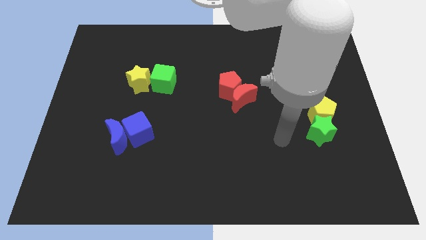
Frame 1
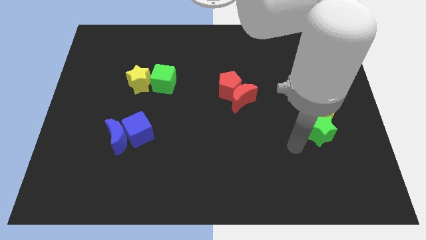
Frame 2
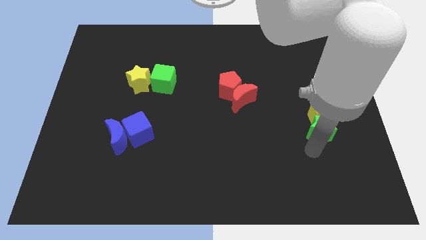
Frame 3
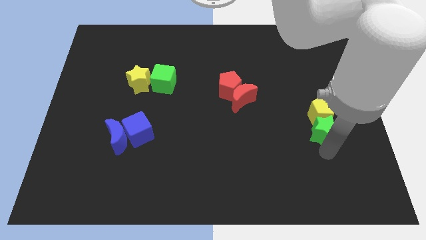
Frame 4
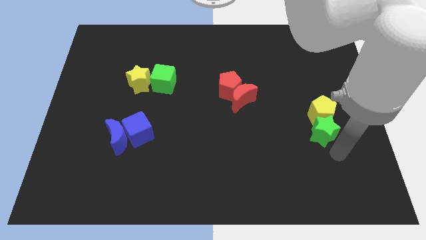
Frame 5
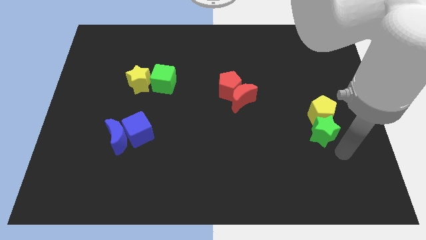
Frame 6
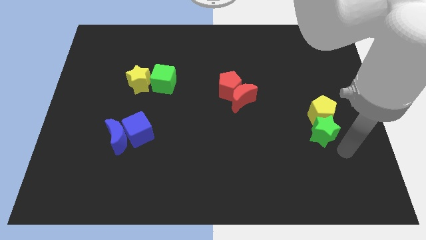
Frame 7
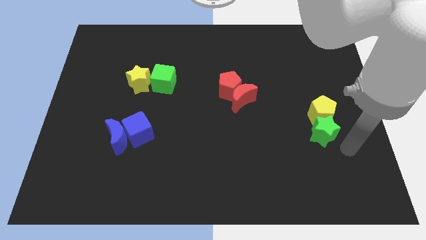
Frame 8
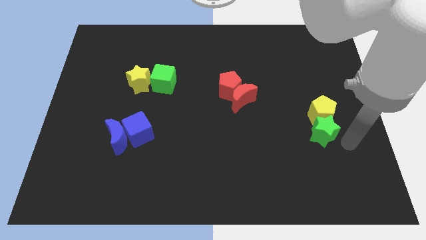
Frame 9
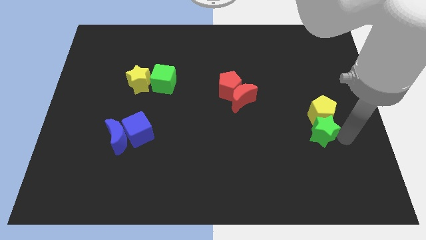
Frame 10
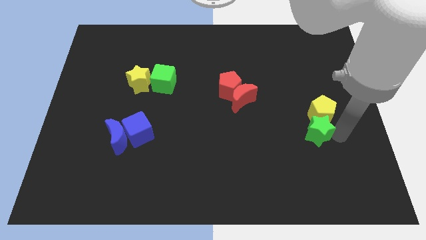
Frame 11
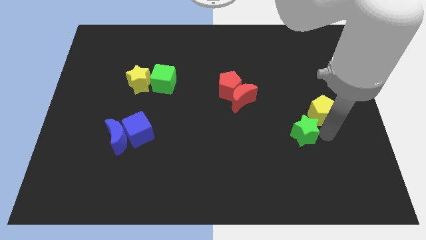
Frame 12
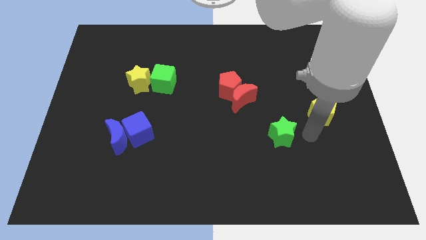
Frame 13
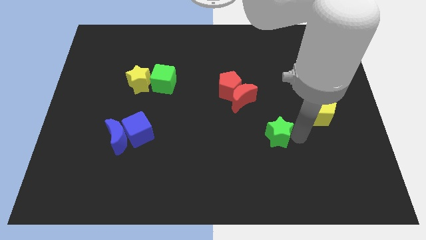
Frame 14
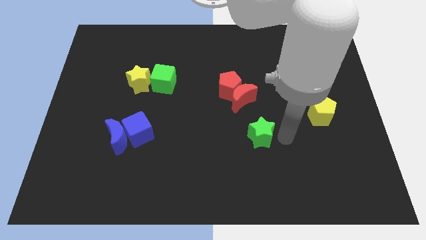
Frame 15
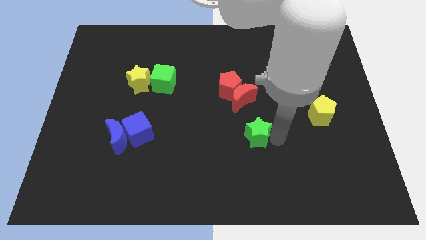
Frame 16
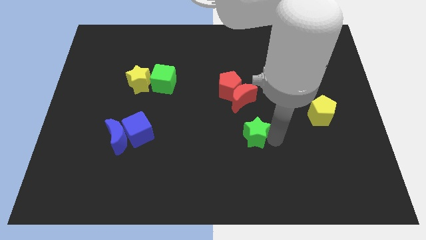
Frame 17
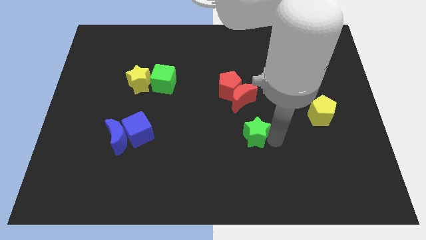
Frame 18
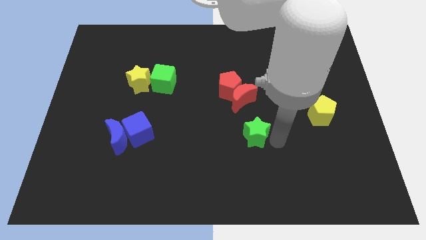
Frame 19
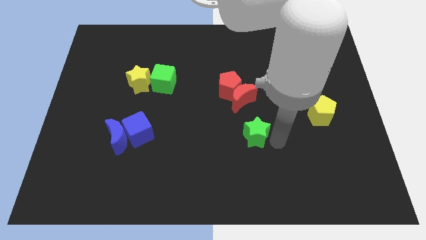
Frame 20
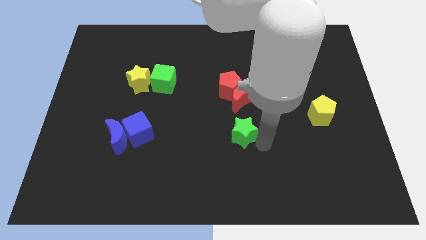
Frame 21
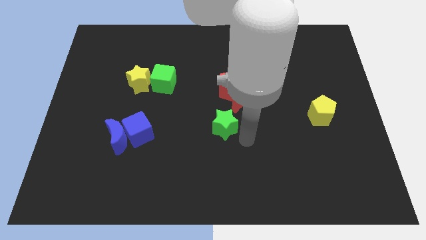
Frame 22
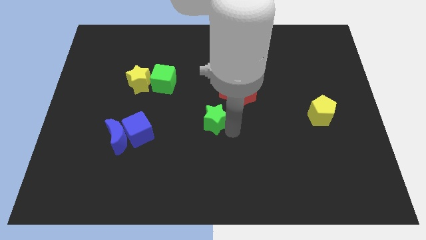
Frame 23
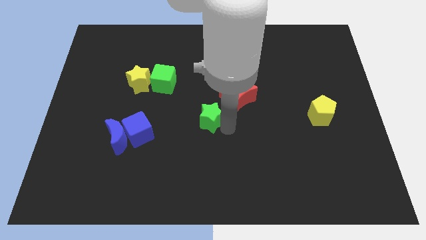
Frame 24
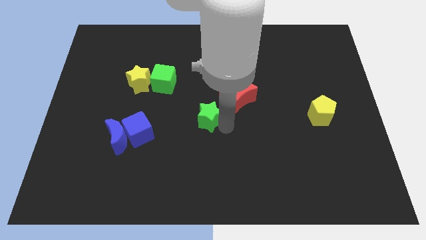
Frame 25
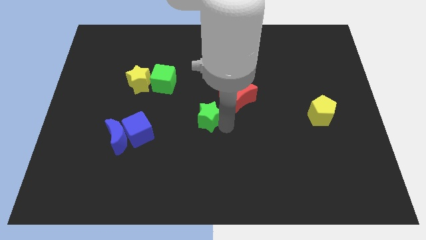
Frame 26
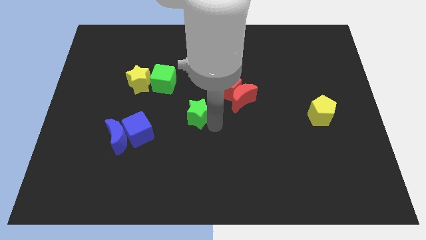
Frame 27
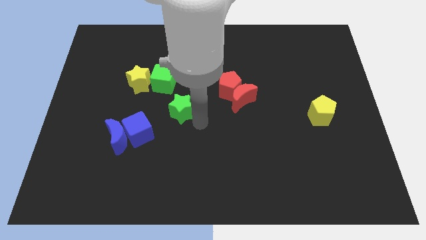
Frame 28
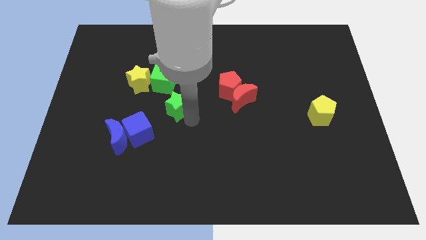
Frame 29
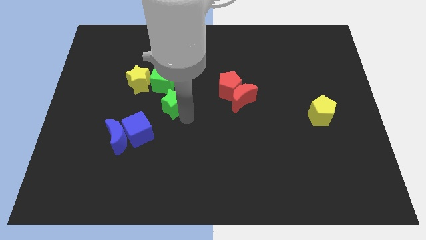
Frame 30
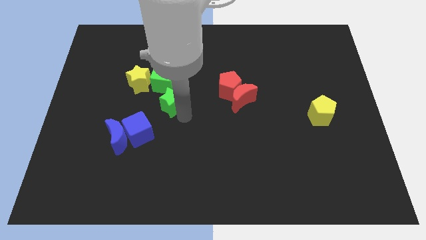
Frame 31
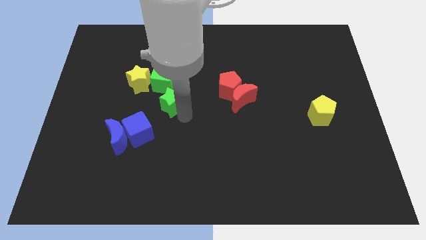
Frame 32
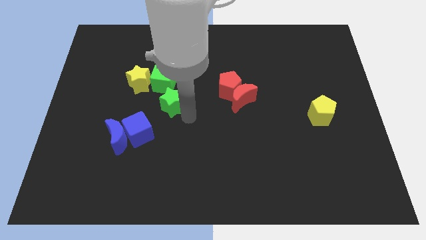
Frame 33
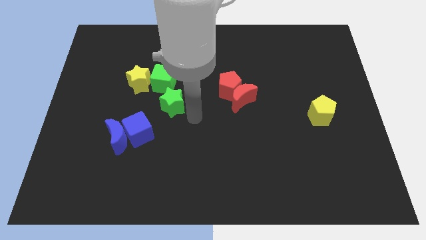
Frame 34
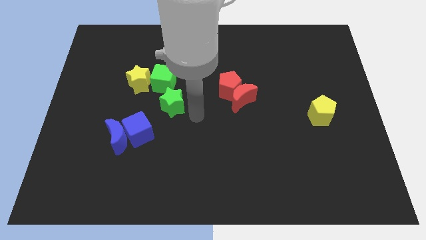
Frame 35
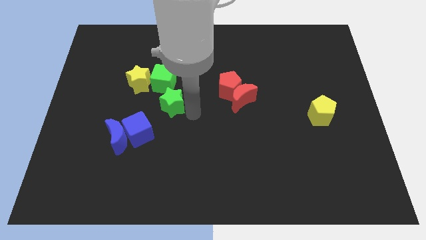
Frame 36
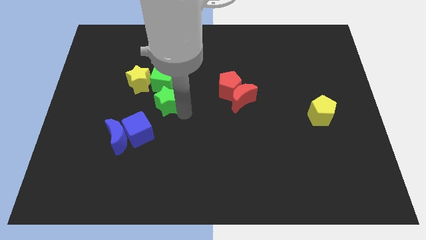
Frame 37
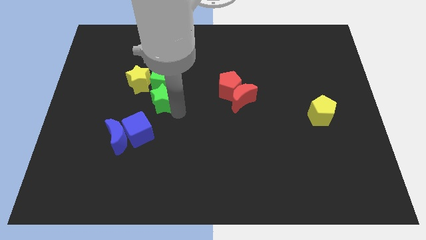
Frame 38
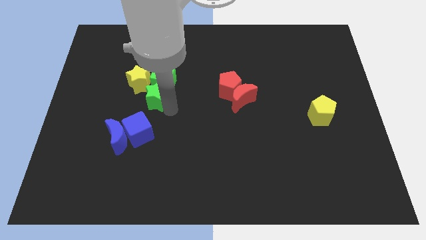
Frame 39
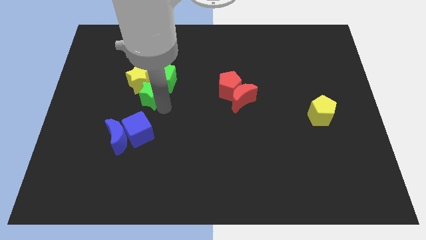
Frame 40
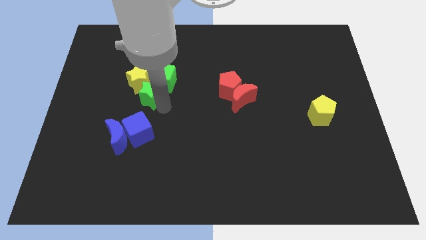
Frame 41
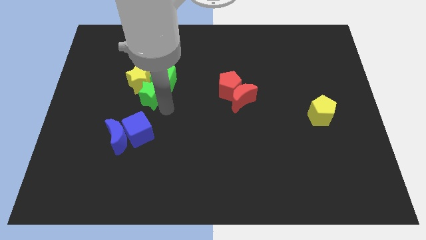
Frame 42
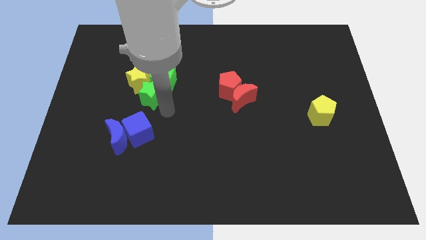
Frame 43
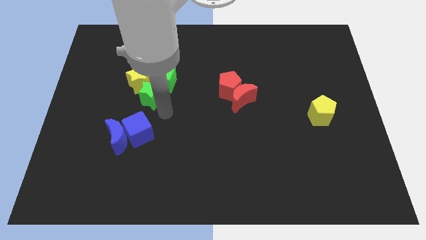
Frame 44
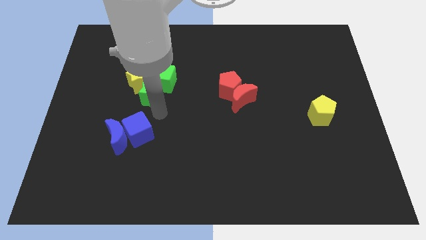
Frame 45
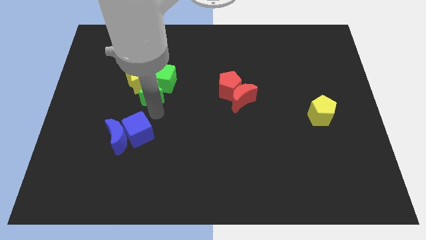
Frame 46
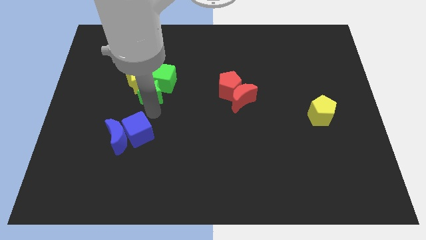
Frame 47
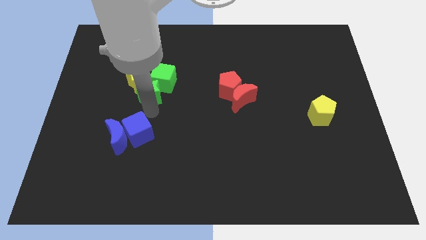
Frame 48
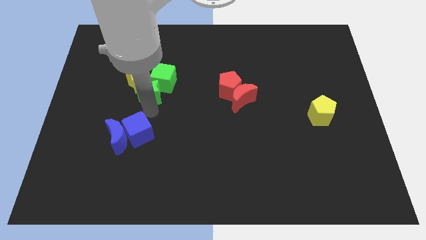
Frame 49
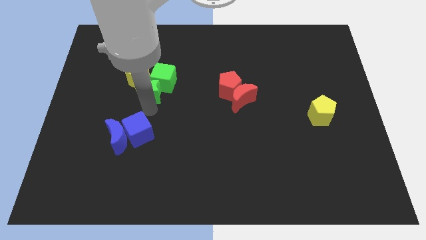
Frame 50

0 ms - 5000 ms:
move green star into the bottom of green cube

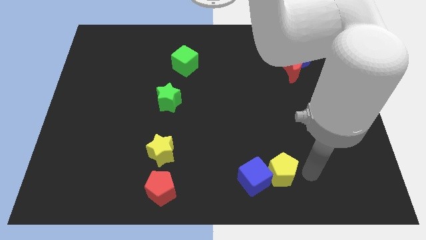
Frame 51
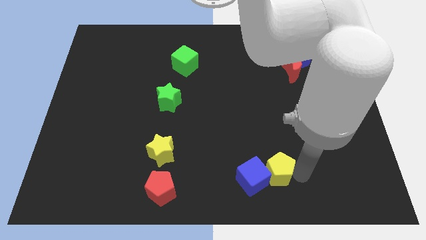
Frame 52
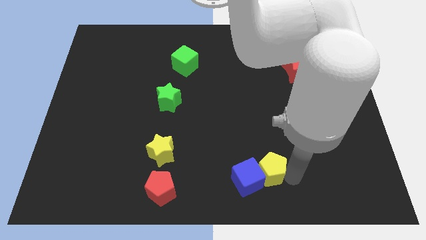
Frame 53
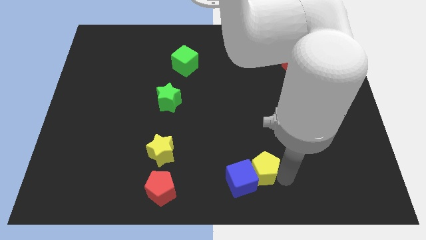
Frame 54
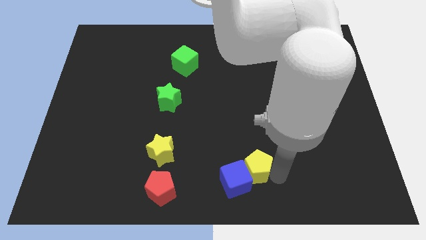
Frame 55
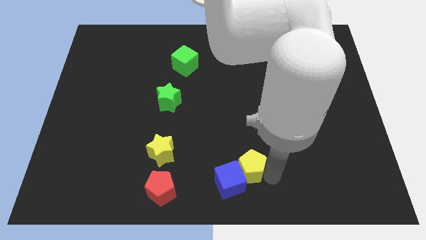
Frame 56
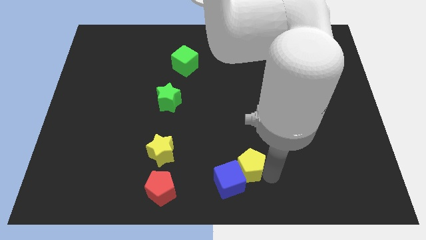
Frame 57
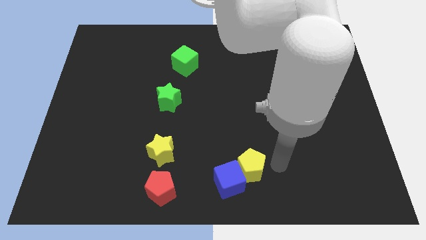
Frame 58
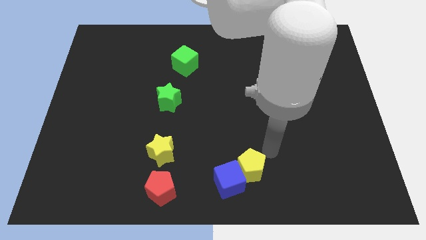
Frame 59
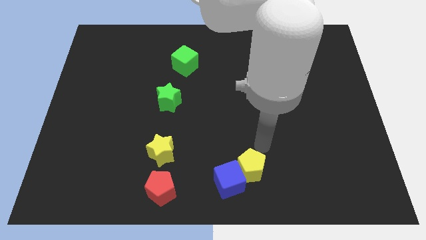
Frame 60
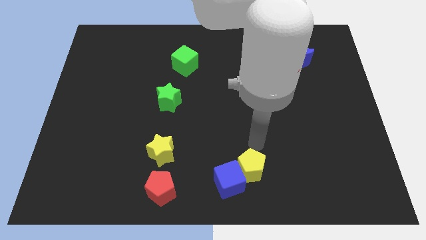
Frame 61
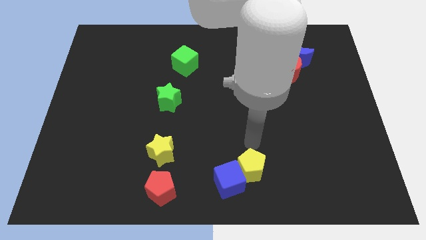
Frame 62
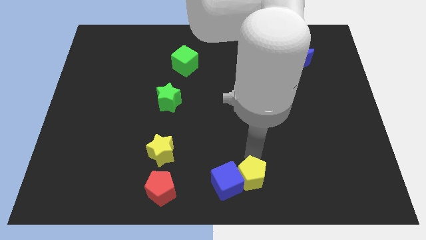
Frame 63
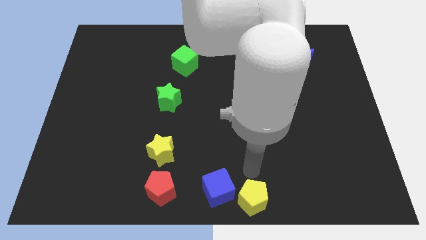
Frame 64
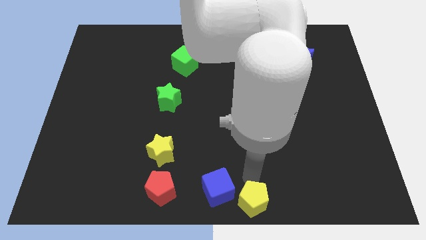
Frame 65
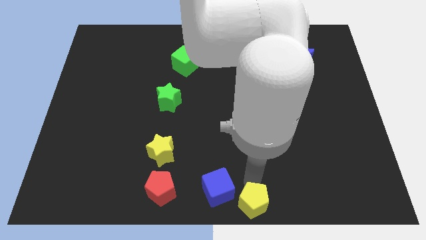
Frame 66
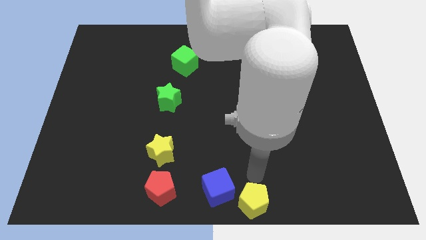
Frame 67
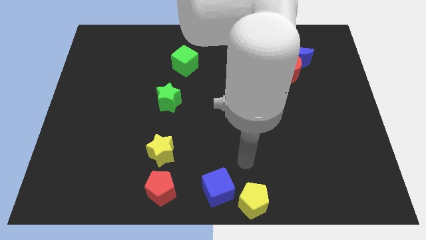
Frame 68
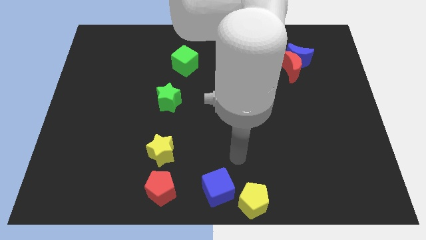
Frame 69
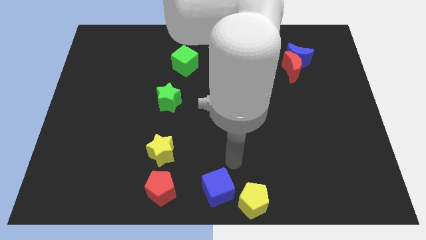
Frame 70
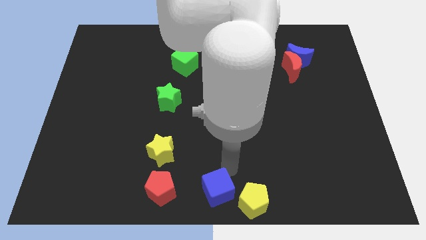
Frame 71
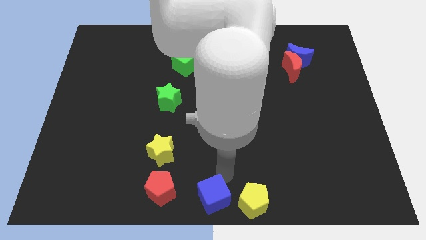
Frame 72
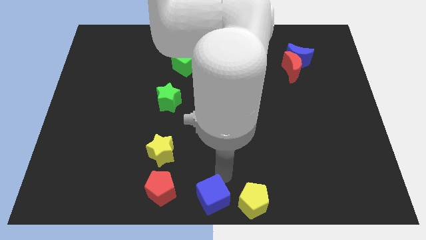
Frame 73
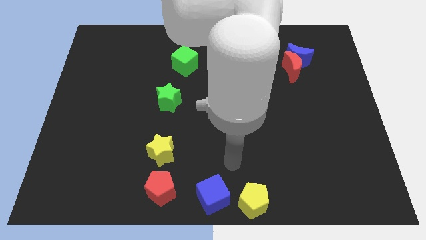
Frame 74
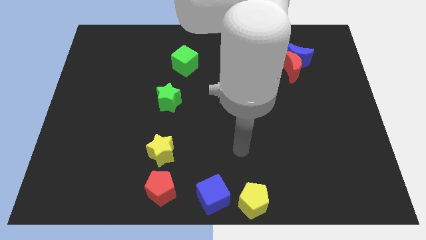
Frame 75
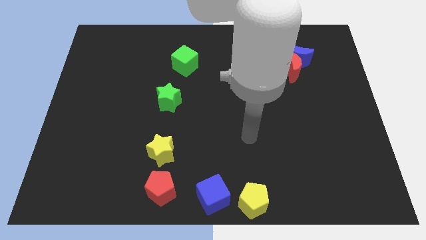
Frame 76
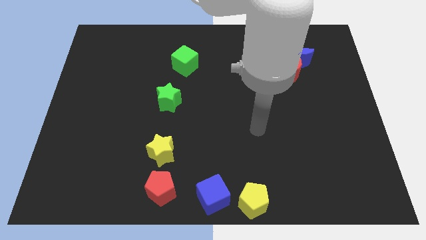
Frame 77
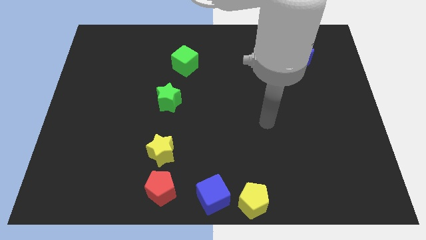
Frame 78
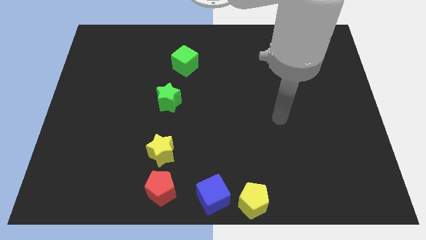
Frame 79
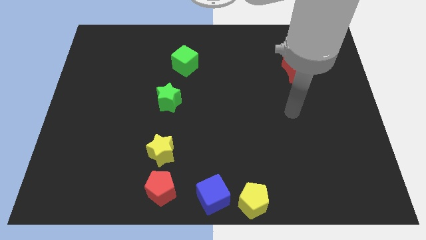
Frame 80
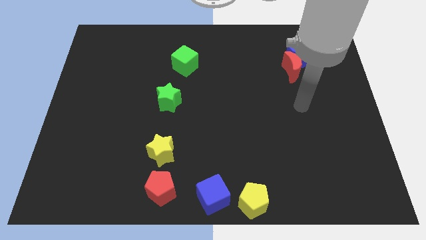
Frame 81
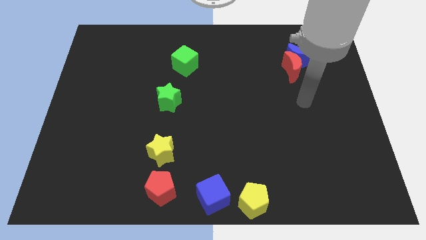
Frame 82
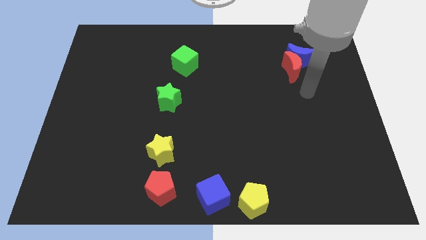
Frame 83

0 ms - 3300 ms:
place blue block and yellow pentagon at bottom of the board

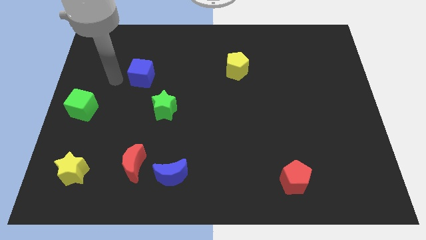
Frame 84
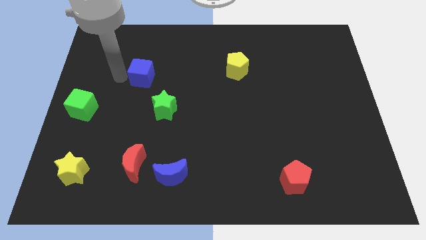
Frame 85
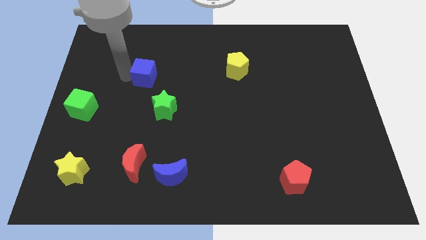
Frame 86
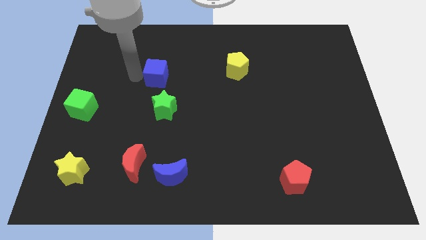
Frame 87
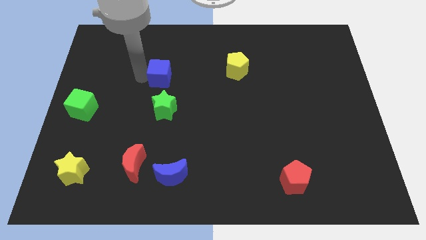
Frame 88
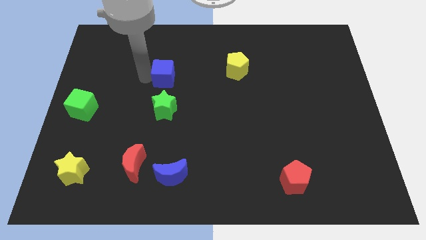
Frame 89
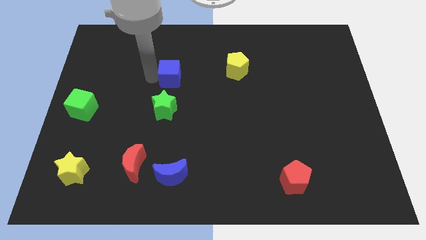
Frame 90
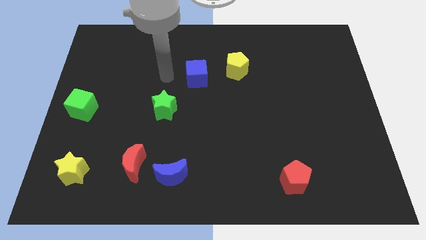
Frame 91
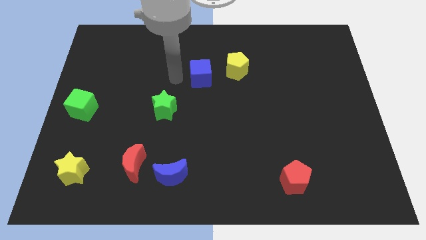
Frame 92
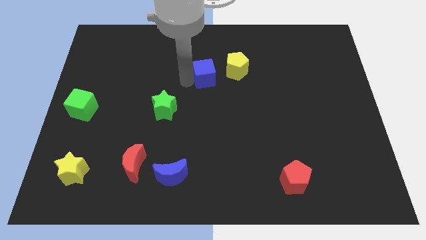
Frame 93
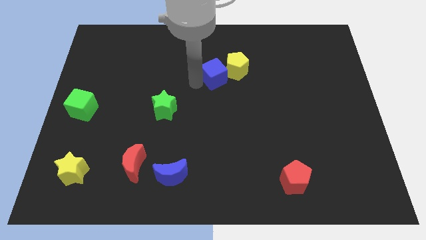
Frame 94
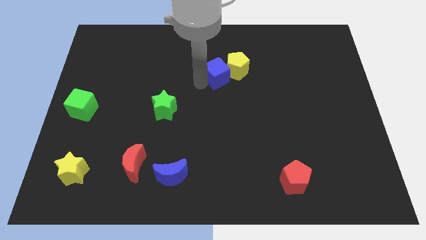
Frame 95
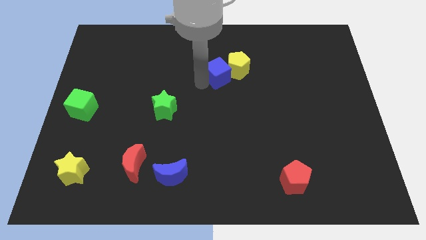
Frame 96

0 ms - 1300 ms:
move the blue cube into the yellow pentagon
